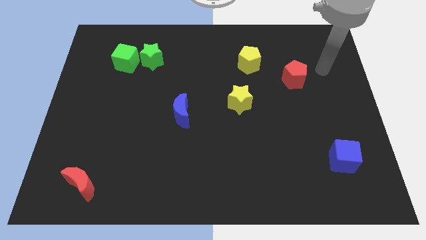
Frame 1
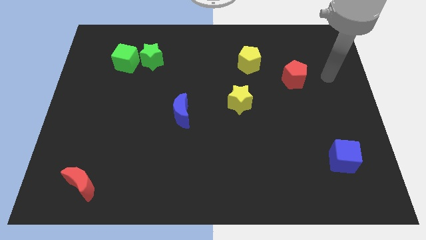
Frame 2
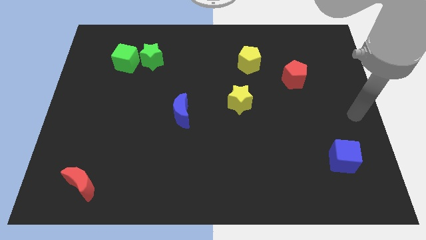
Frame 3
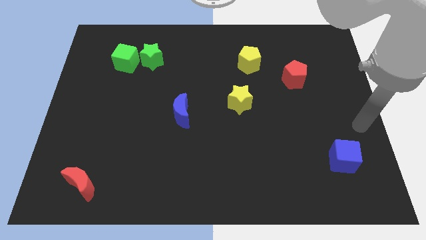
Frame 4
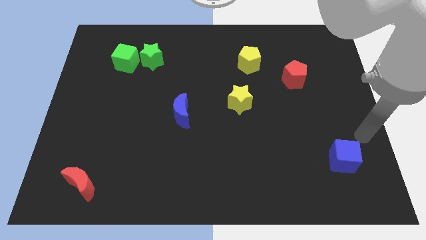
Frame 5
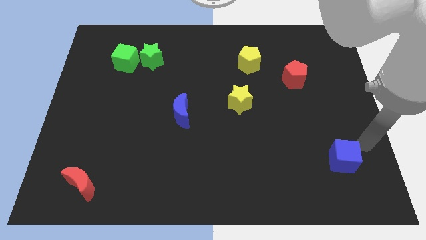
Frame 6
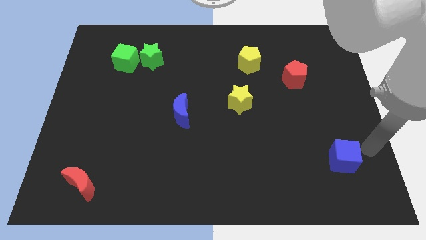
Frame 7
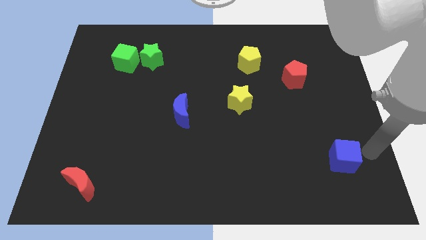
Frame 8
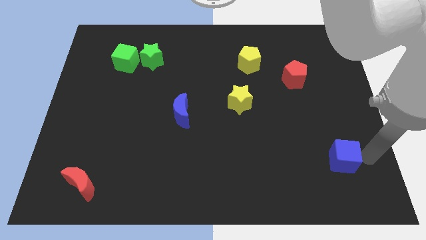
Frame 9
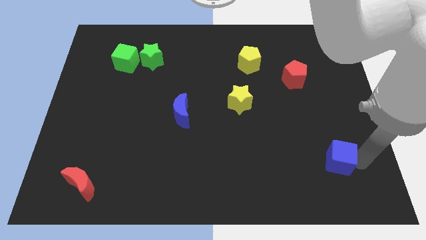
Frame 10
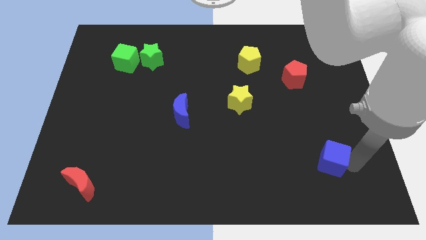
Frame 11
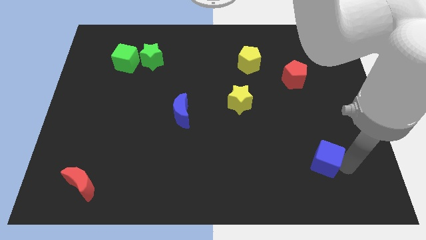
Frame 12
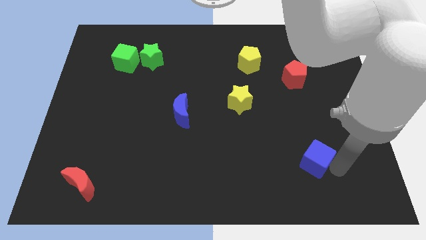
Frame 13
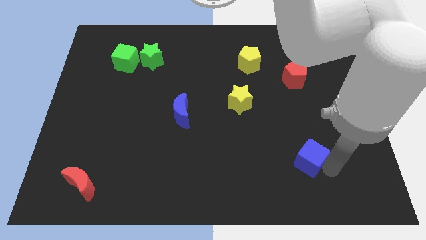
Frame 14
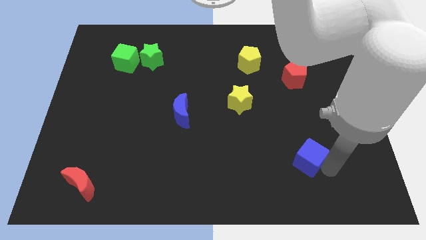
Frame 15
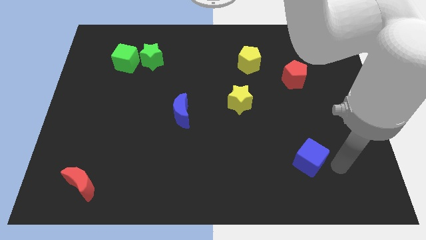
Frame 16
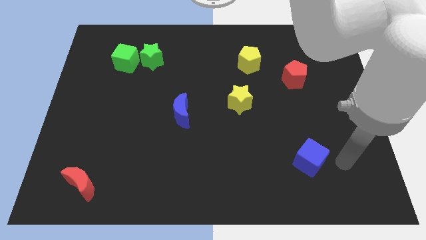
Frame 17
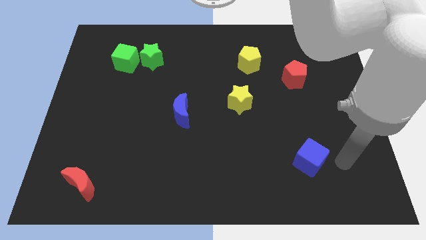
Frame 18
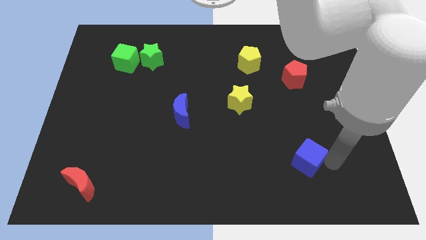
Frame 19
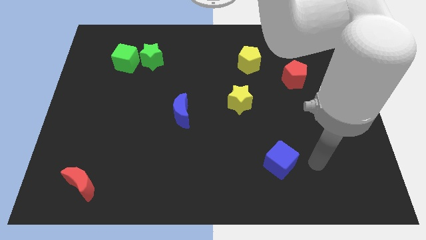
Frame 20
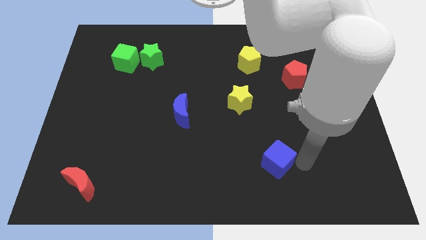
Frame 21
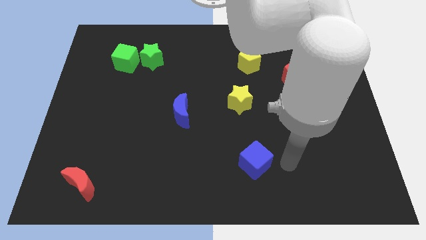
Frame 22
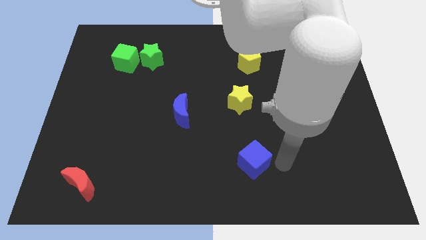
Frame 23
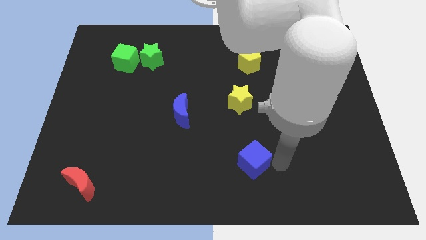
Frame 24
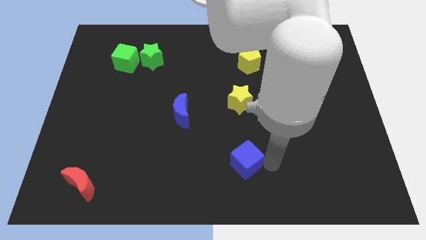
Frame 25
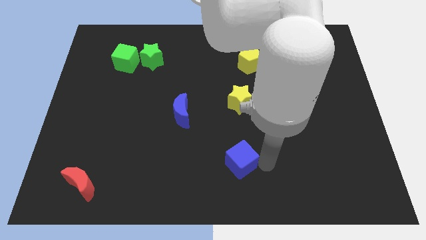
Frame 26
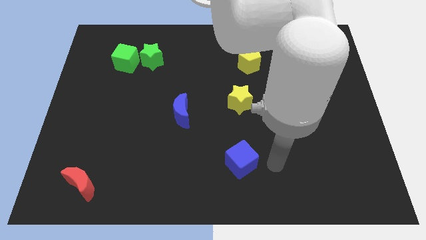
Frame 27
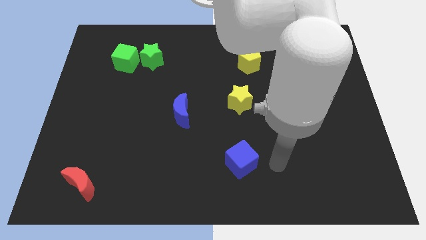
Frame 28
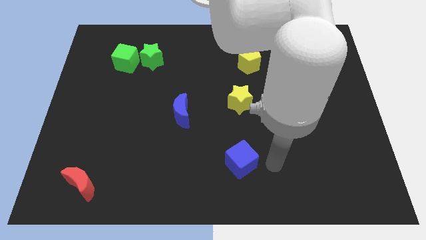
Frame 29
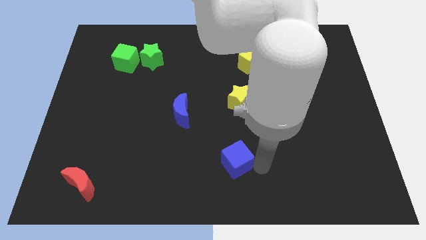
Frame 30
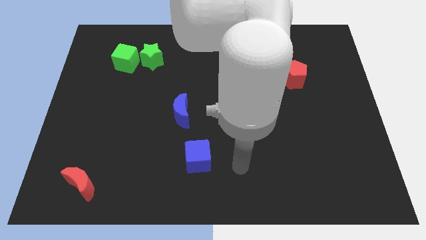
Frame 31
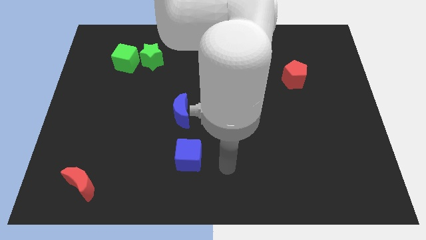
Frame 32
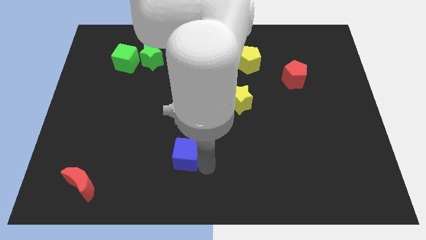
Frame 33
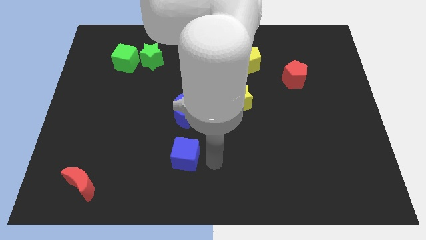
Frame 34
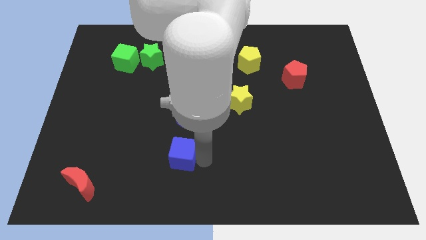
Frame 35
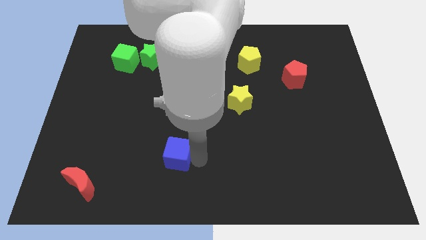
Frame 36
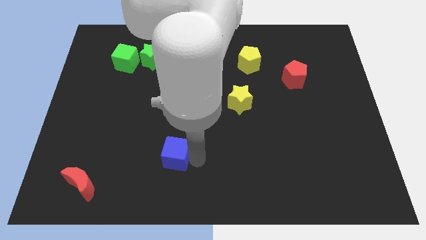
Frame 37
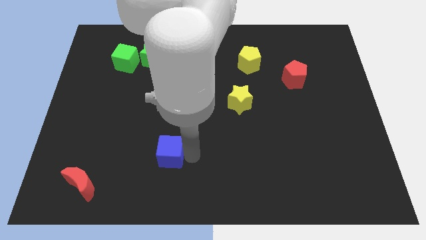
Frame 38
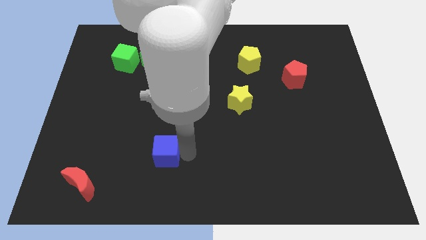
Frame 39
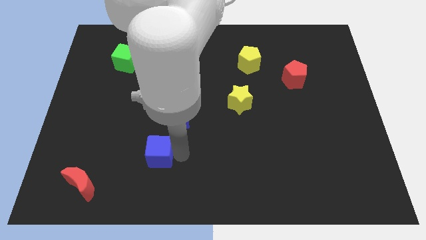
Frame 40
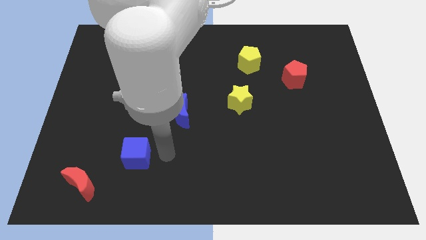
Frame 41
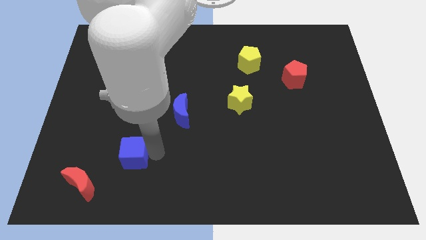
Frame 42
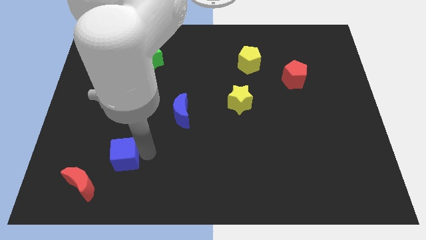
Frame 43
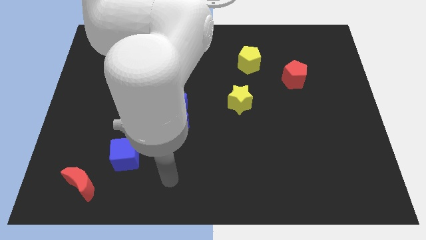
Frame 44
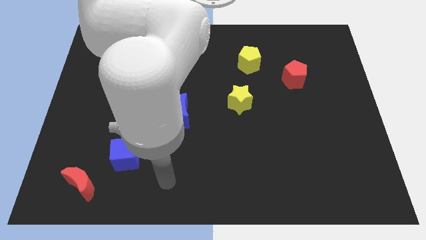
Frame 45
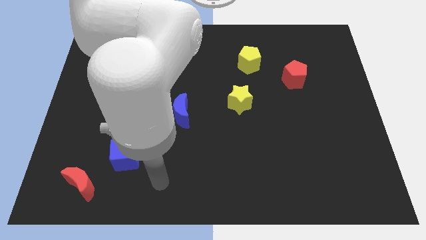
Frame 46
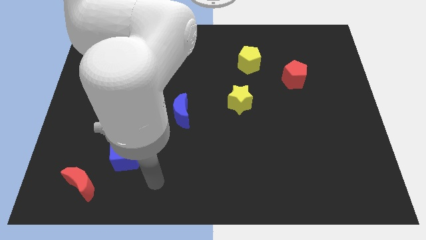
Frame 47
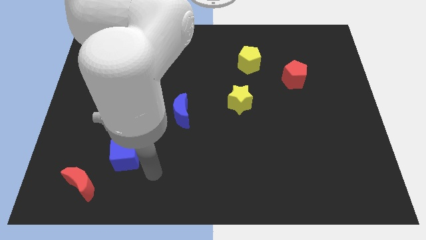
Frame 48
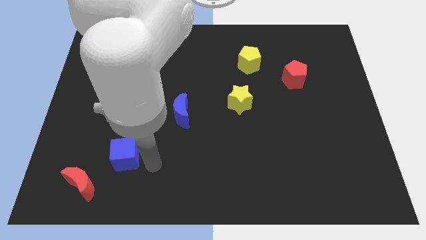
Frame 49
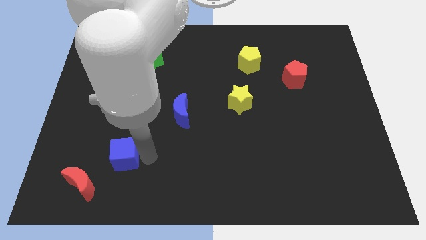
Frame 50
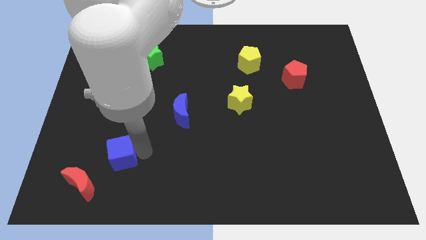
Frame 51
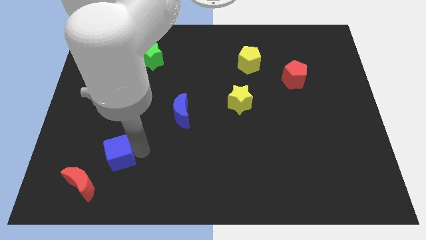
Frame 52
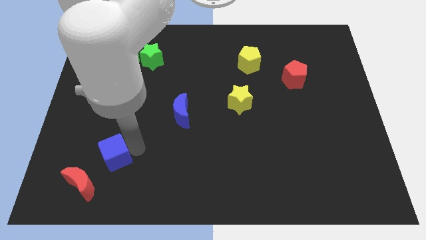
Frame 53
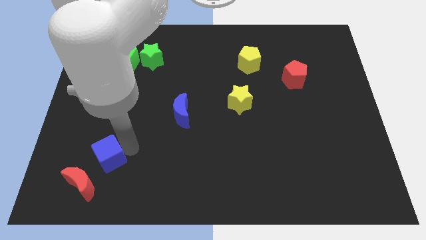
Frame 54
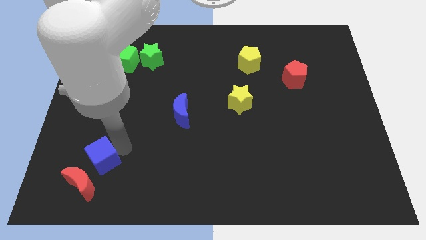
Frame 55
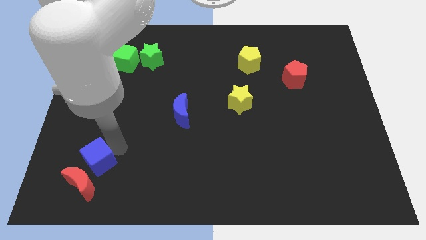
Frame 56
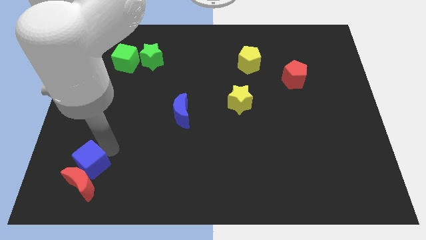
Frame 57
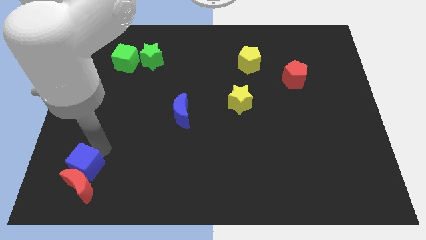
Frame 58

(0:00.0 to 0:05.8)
push the blue cube next to the red moon
